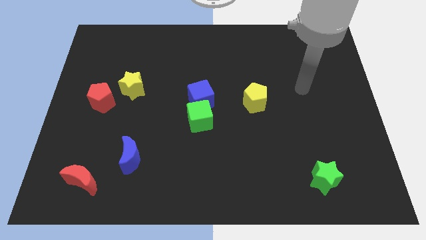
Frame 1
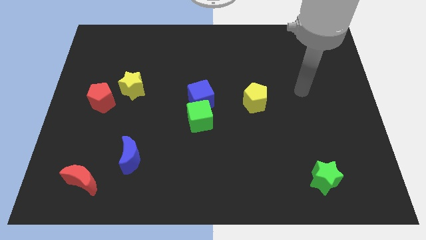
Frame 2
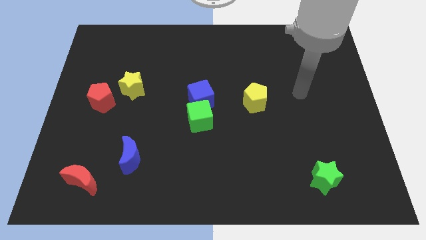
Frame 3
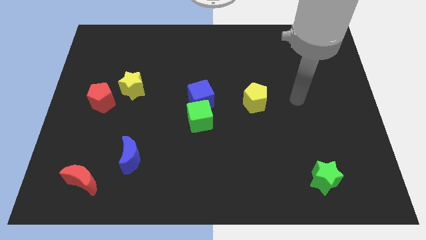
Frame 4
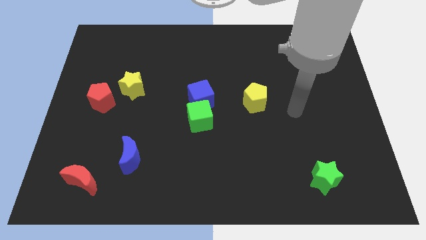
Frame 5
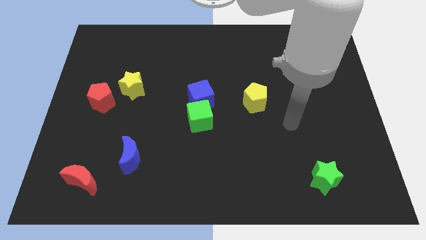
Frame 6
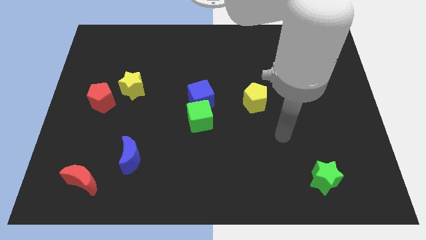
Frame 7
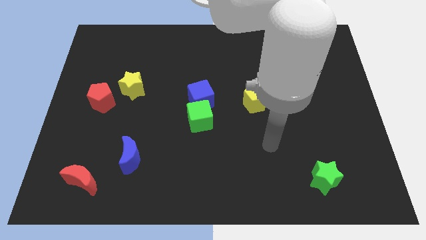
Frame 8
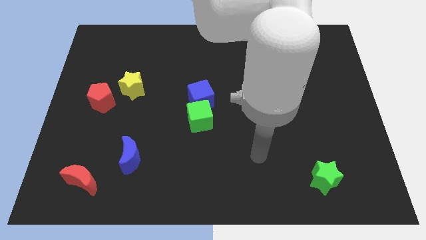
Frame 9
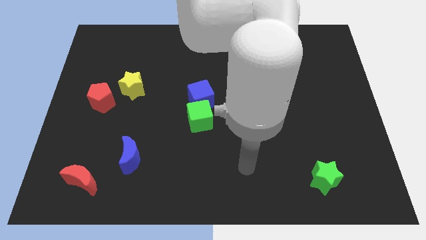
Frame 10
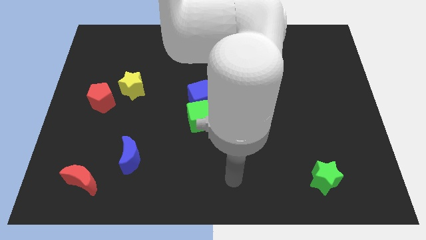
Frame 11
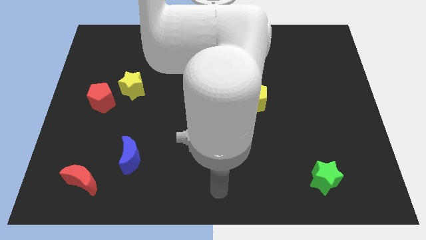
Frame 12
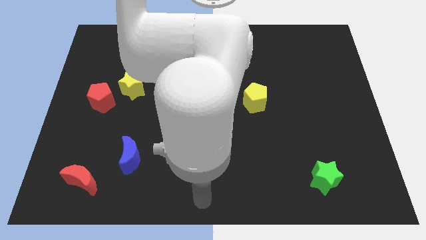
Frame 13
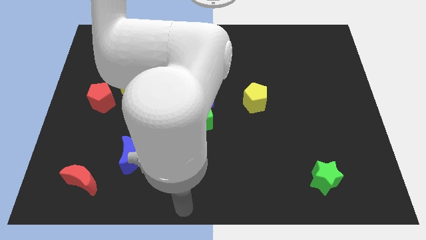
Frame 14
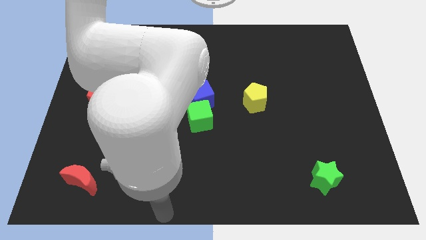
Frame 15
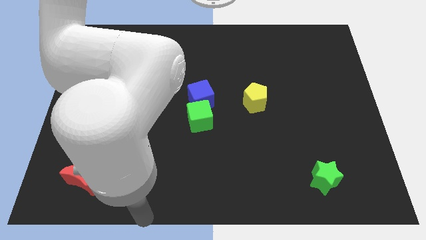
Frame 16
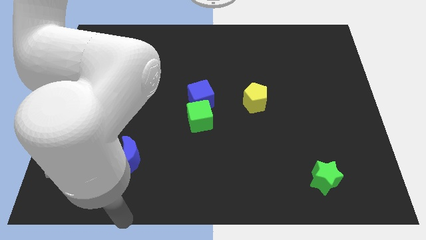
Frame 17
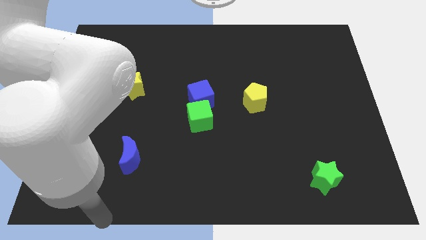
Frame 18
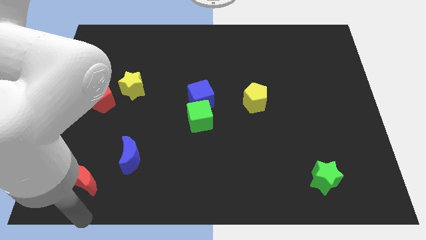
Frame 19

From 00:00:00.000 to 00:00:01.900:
point your arm below red moon

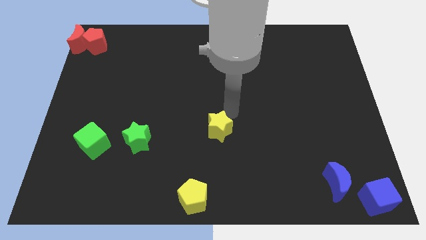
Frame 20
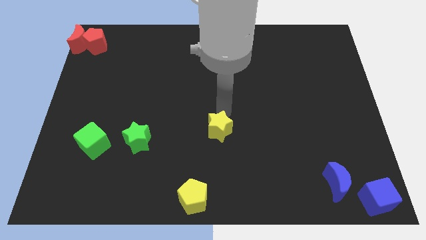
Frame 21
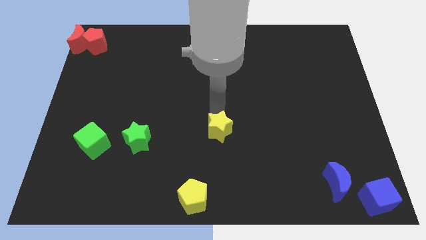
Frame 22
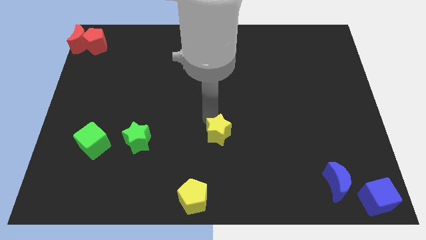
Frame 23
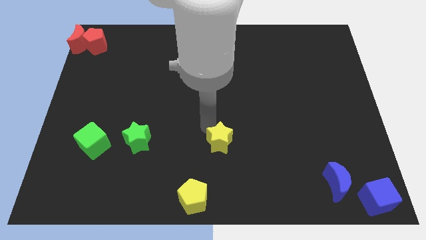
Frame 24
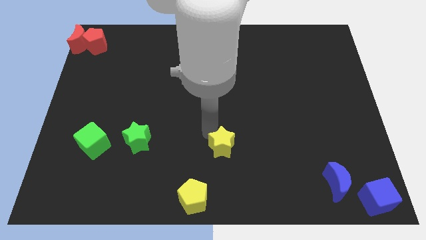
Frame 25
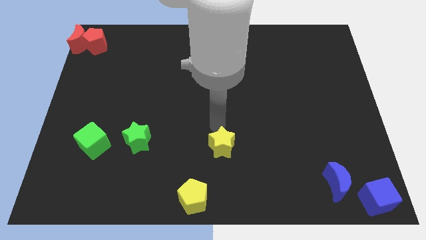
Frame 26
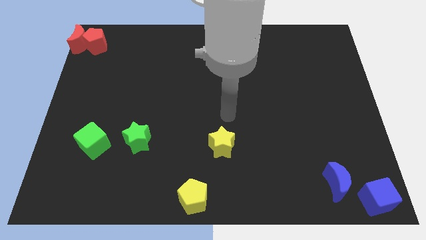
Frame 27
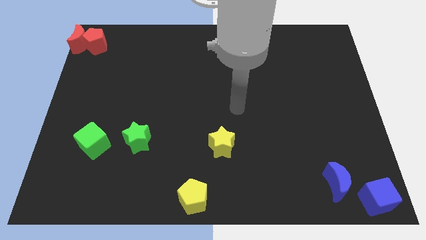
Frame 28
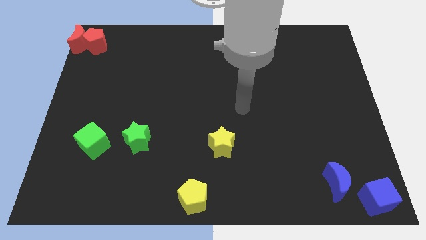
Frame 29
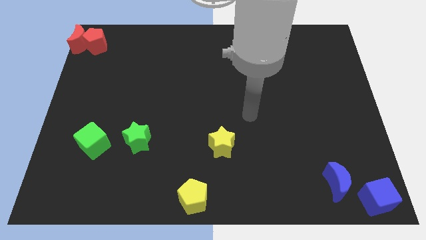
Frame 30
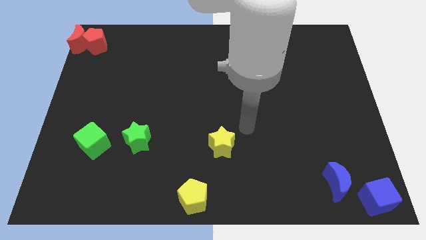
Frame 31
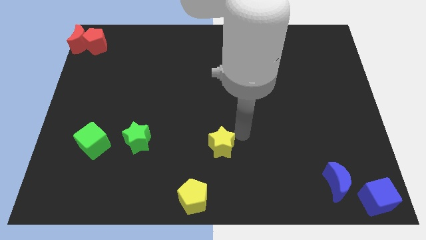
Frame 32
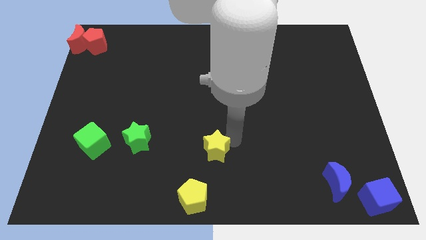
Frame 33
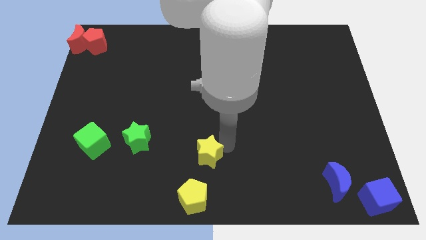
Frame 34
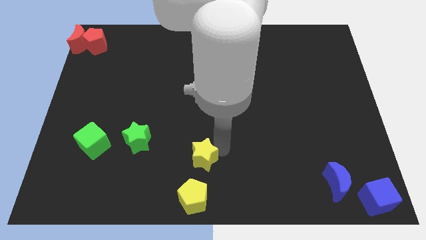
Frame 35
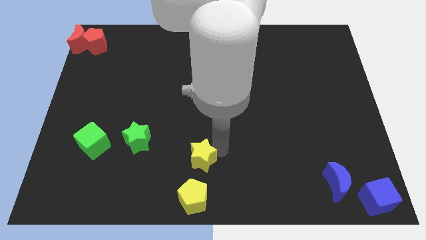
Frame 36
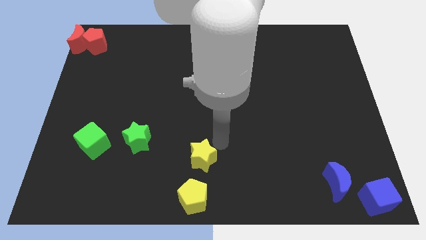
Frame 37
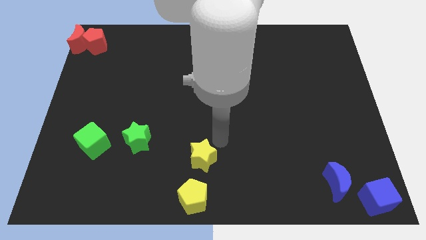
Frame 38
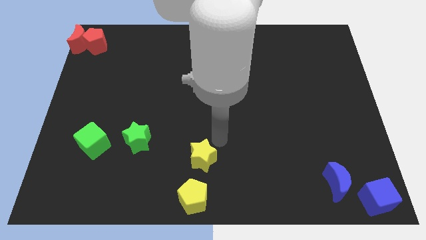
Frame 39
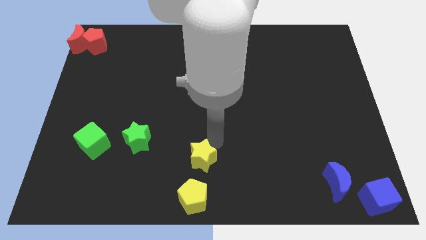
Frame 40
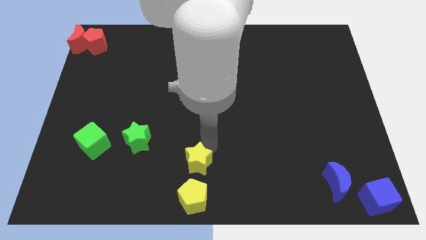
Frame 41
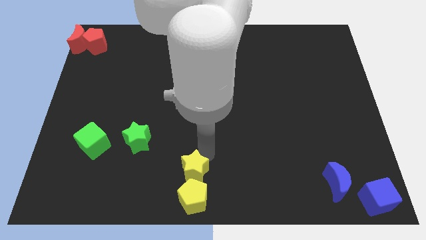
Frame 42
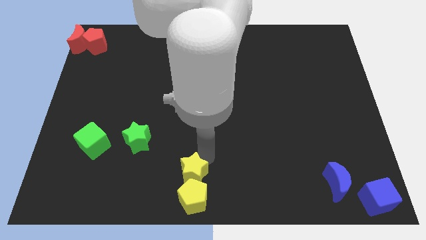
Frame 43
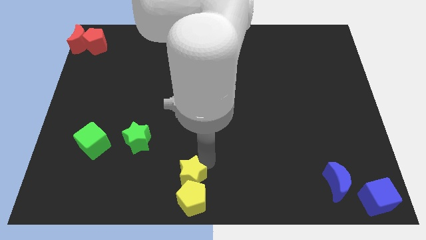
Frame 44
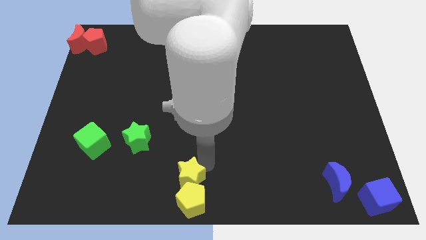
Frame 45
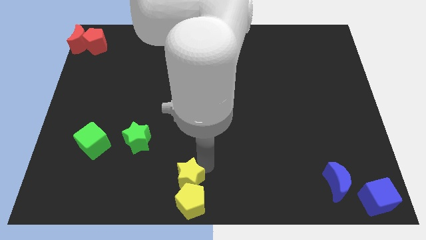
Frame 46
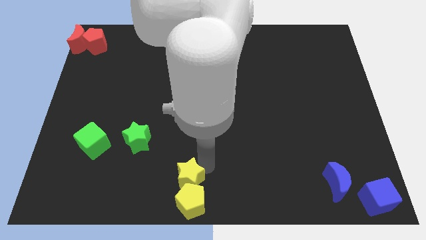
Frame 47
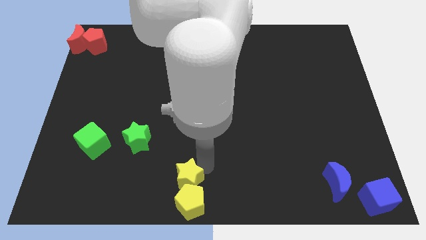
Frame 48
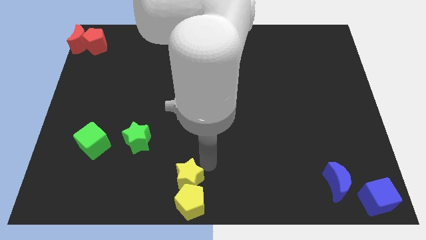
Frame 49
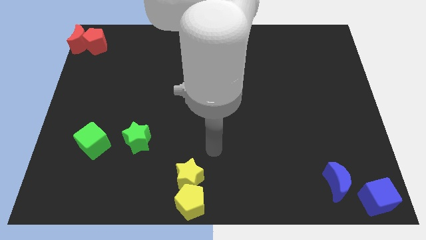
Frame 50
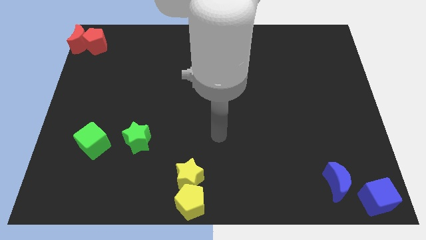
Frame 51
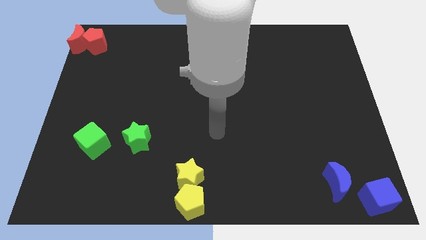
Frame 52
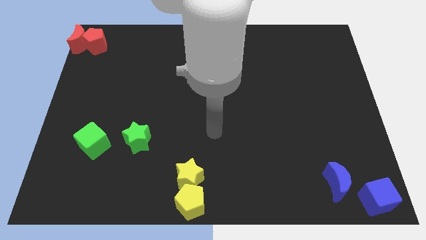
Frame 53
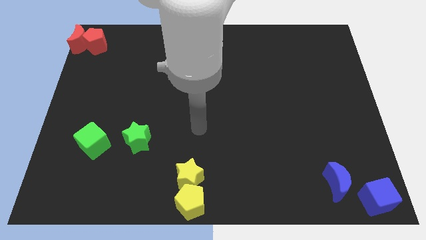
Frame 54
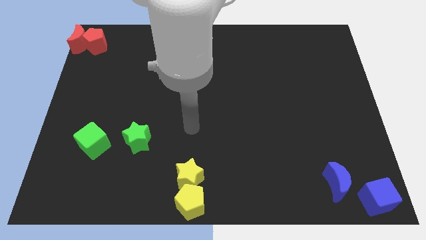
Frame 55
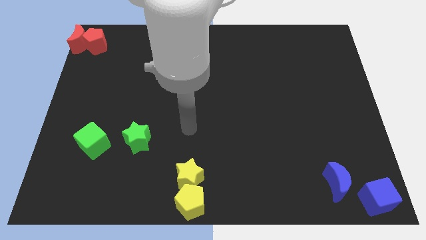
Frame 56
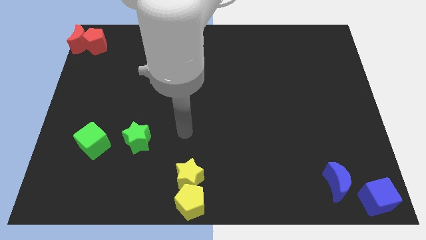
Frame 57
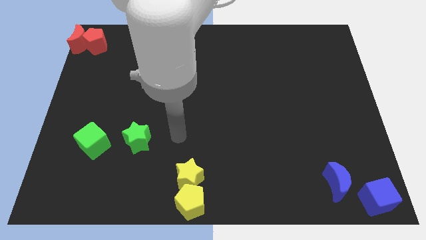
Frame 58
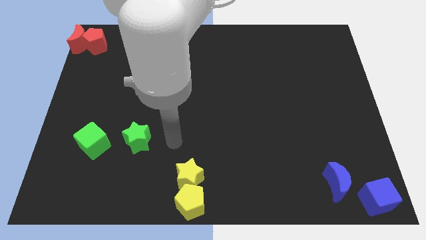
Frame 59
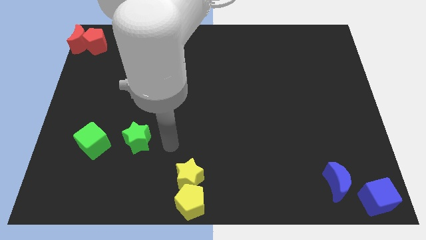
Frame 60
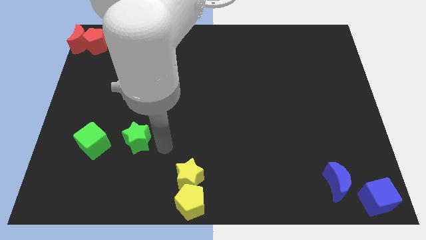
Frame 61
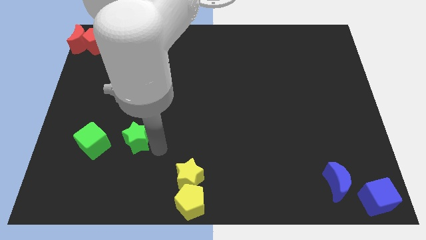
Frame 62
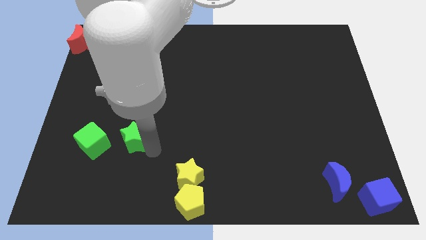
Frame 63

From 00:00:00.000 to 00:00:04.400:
push the yellow star into the yellow pentagon

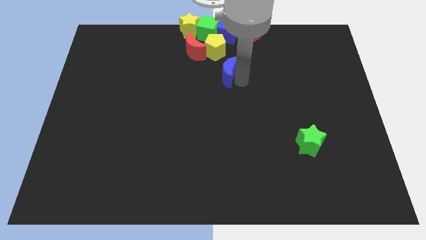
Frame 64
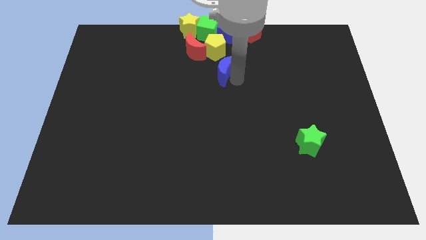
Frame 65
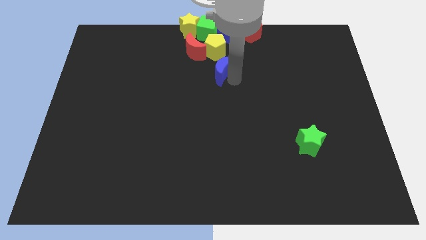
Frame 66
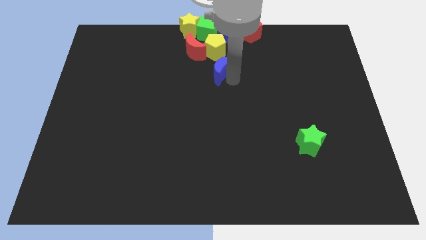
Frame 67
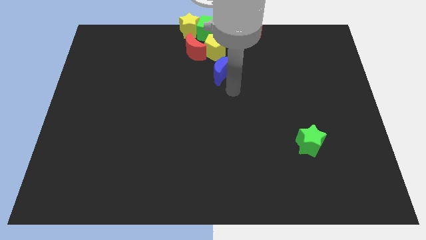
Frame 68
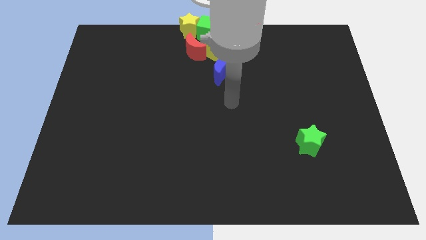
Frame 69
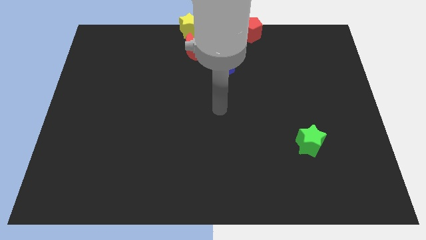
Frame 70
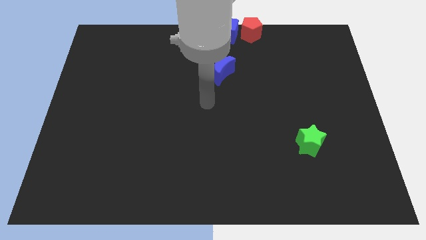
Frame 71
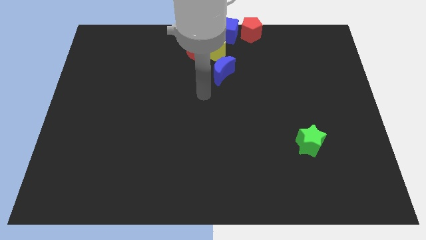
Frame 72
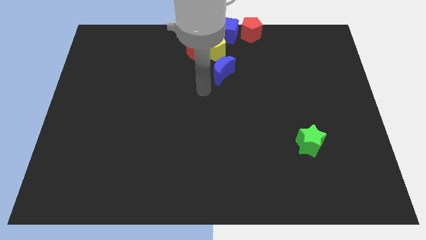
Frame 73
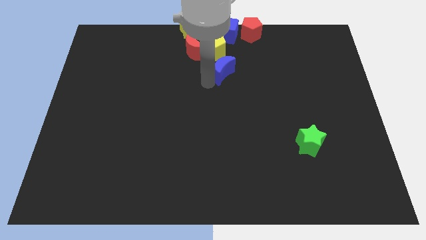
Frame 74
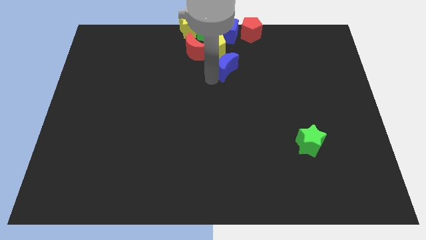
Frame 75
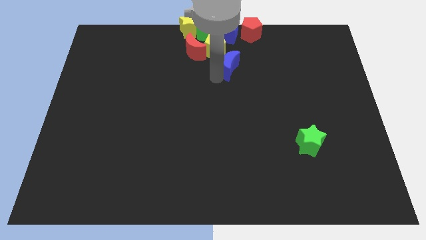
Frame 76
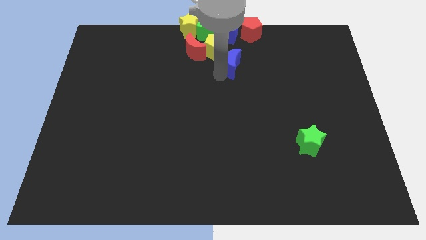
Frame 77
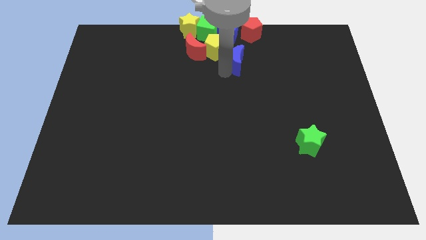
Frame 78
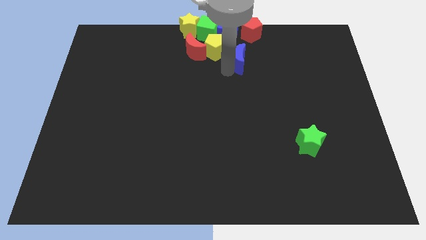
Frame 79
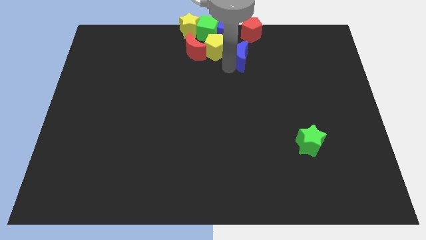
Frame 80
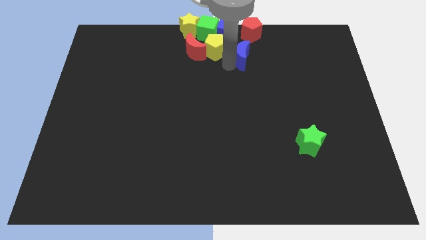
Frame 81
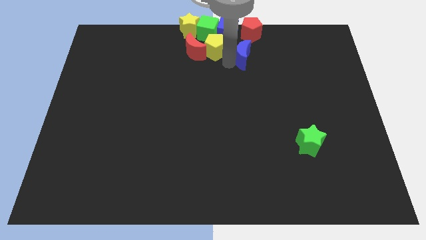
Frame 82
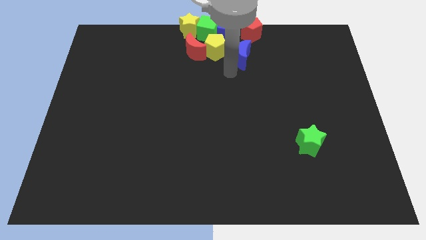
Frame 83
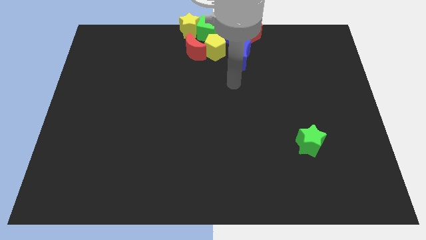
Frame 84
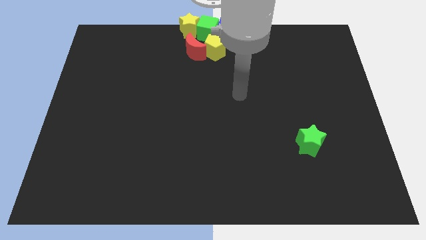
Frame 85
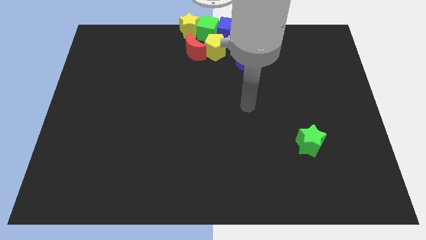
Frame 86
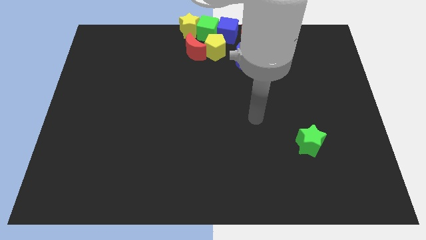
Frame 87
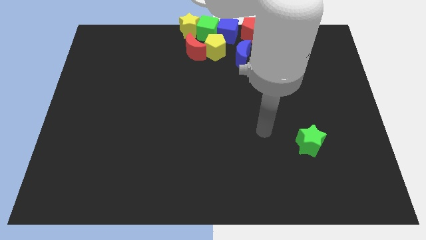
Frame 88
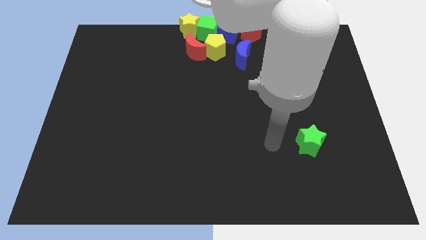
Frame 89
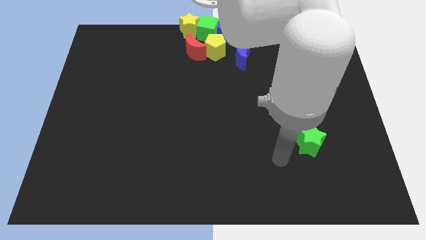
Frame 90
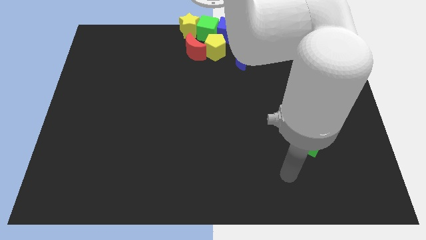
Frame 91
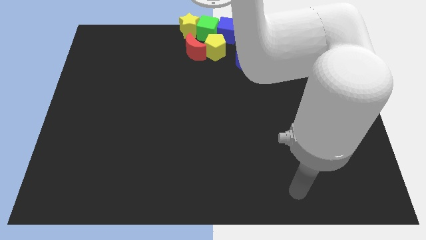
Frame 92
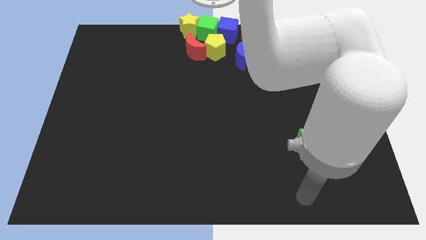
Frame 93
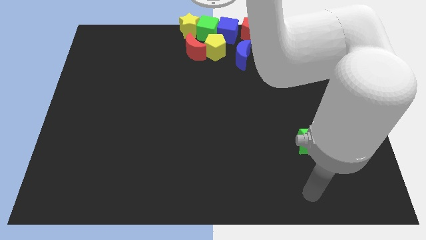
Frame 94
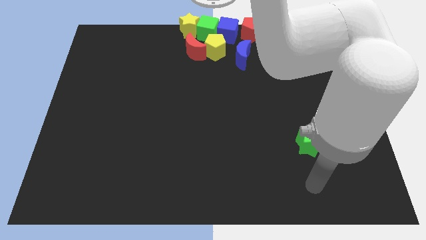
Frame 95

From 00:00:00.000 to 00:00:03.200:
place blue crescent below red pentagon
